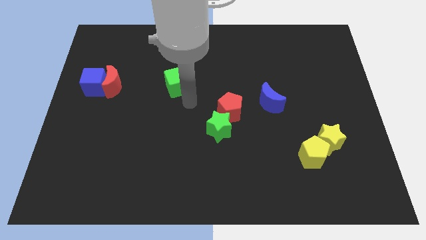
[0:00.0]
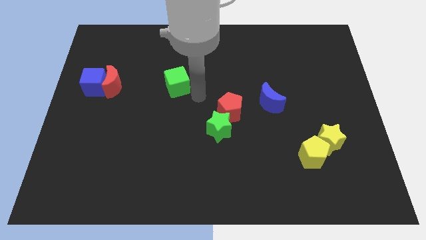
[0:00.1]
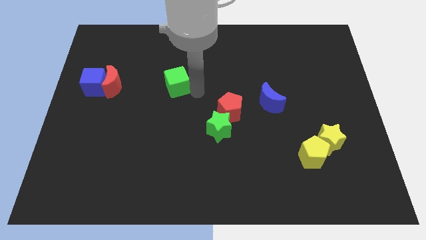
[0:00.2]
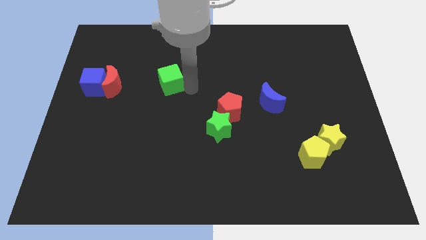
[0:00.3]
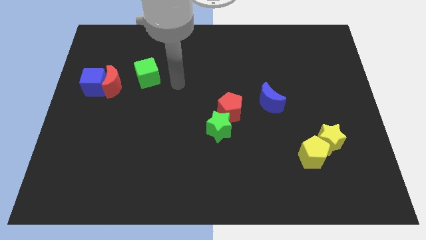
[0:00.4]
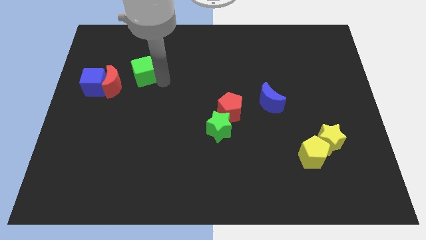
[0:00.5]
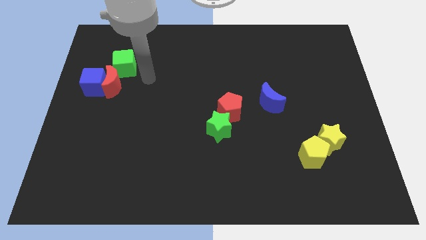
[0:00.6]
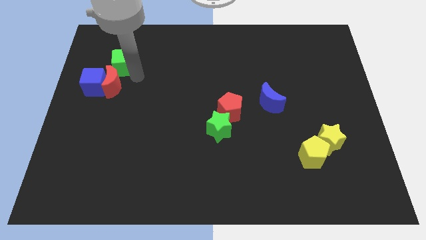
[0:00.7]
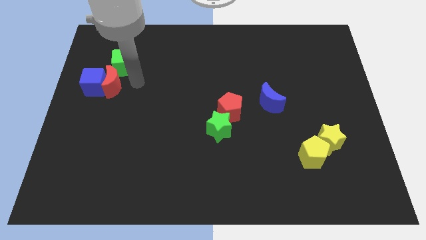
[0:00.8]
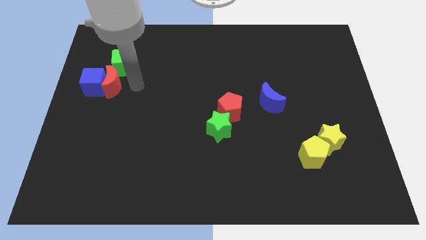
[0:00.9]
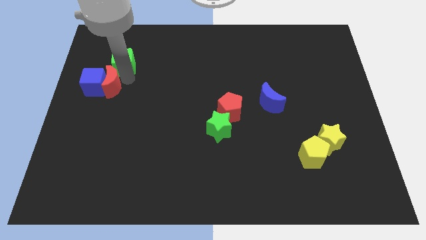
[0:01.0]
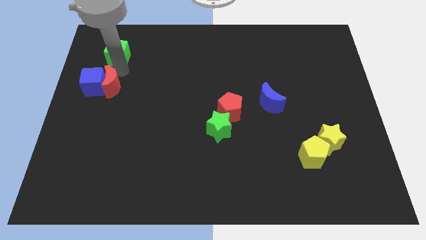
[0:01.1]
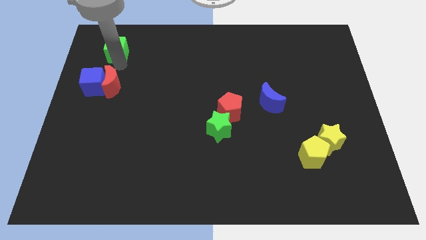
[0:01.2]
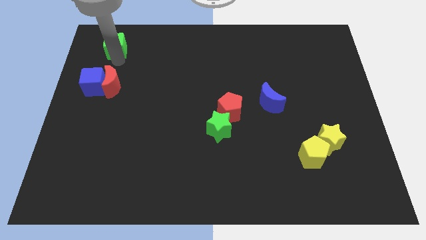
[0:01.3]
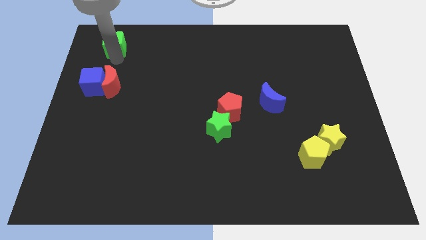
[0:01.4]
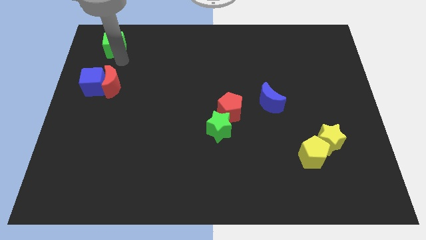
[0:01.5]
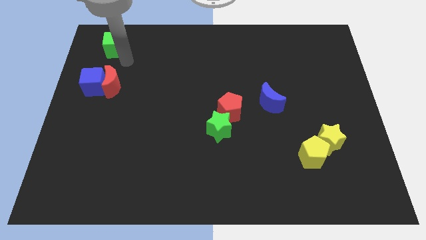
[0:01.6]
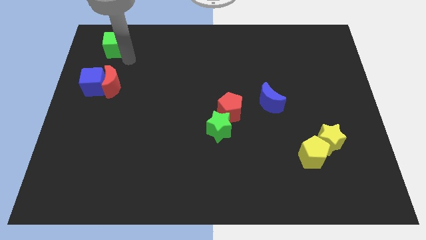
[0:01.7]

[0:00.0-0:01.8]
move the green cube to the vertical top of red moon

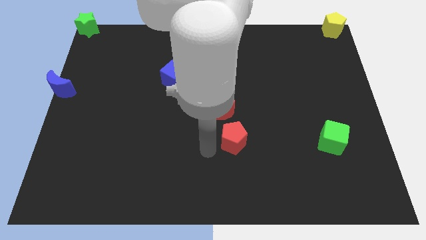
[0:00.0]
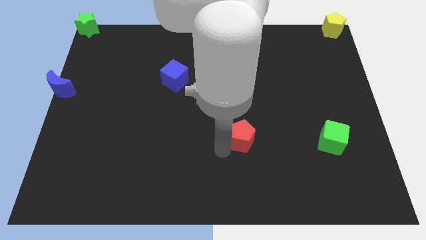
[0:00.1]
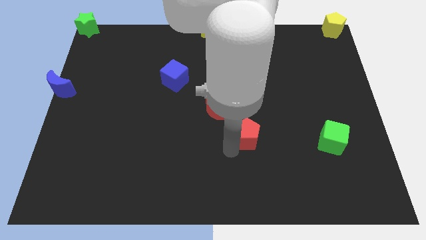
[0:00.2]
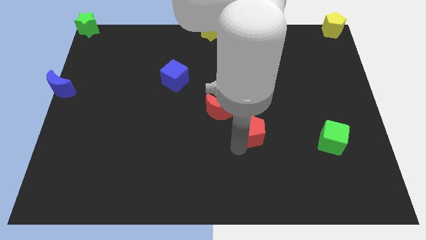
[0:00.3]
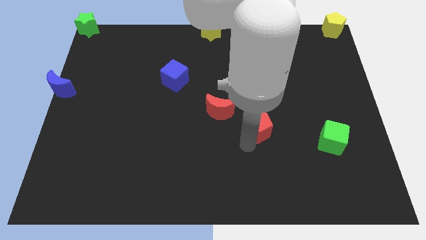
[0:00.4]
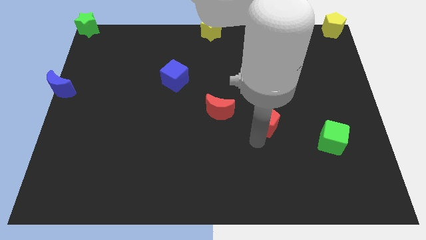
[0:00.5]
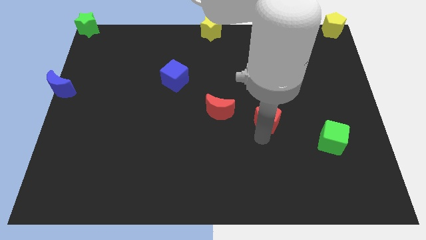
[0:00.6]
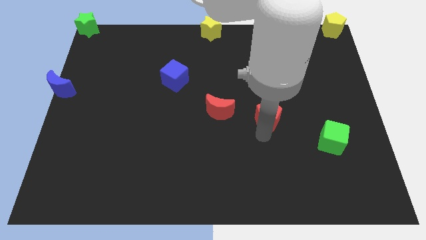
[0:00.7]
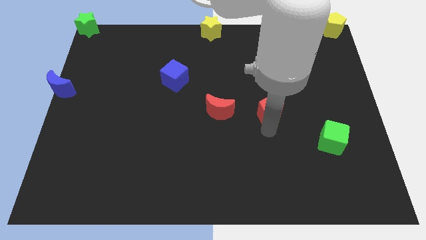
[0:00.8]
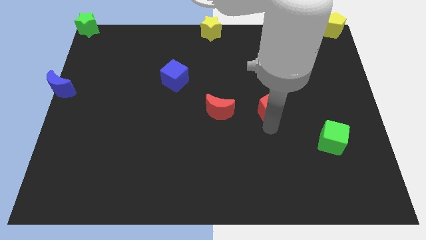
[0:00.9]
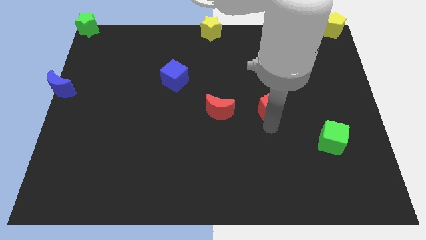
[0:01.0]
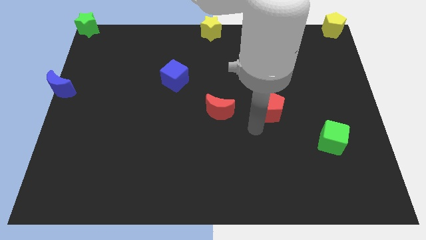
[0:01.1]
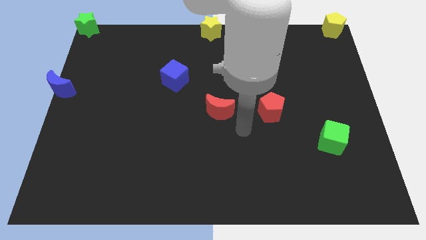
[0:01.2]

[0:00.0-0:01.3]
push the red pentagon to the right of red crescent

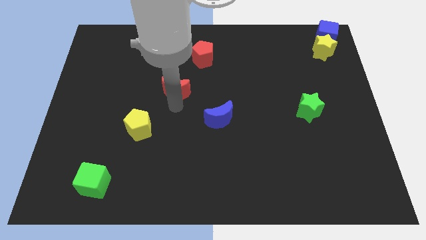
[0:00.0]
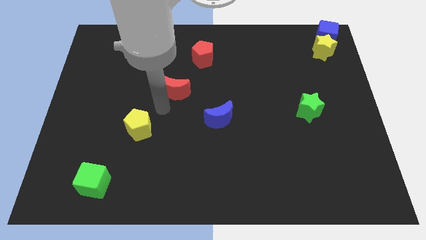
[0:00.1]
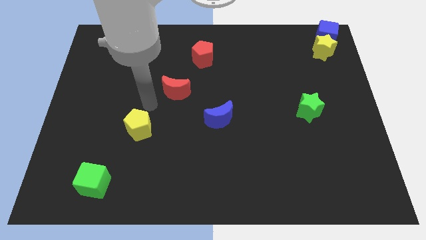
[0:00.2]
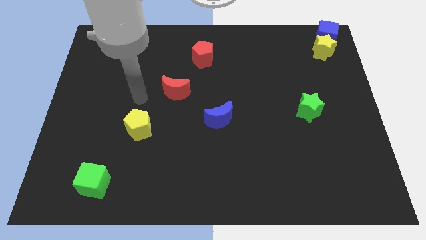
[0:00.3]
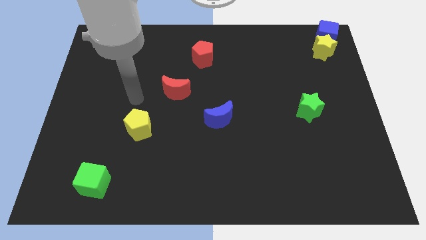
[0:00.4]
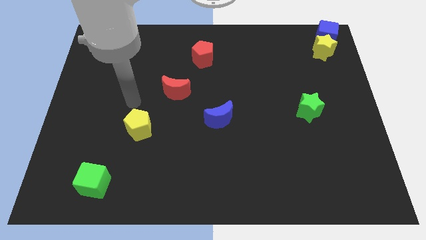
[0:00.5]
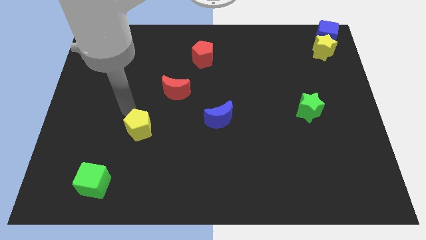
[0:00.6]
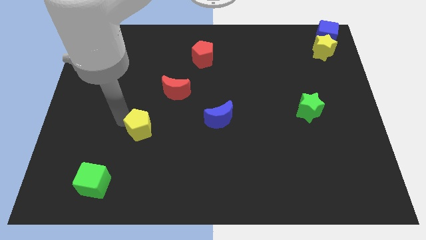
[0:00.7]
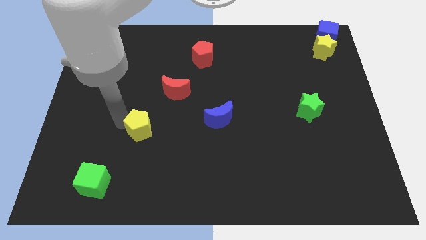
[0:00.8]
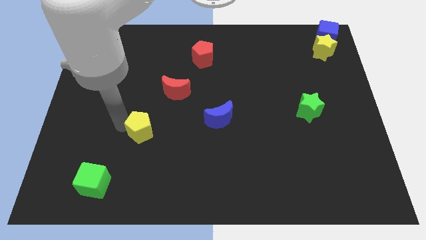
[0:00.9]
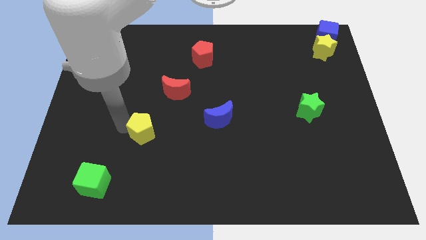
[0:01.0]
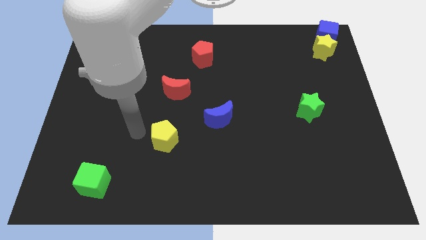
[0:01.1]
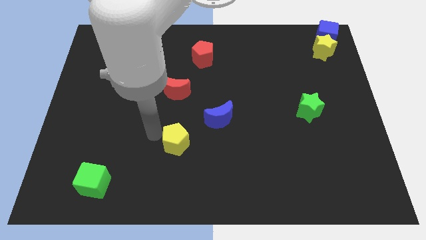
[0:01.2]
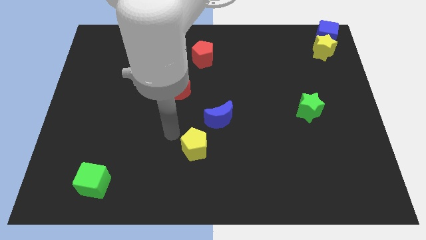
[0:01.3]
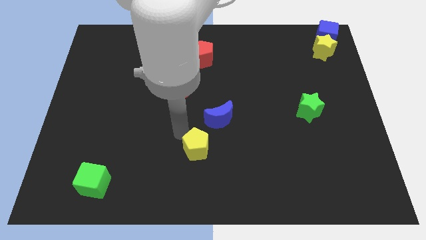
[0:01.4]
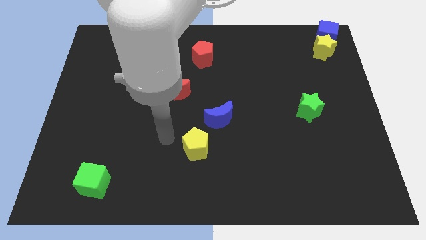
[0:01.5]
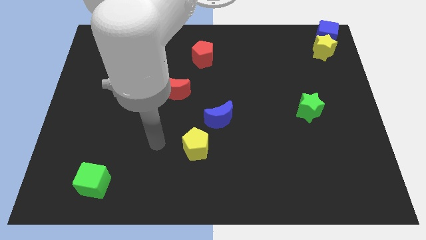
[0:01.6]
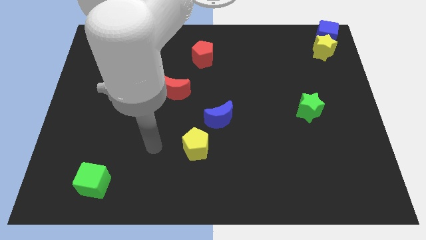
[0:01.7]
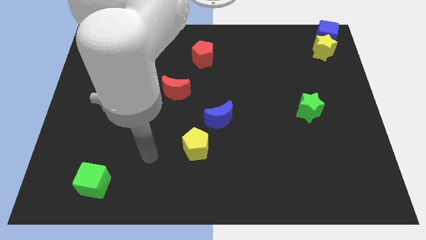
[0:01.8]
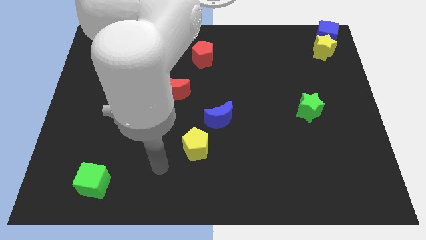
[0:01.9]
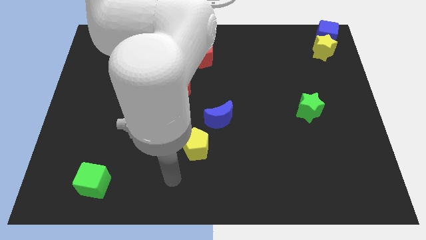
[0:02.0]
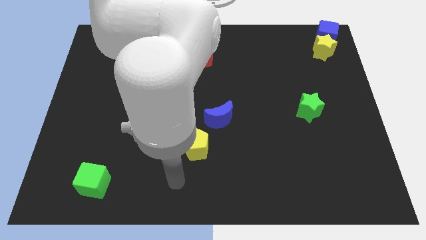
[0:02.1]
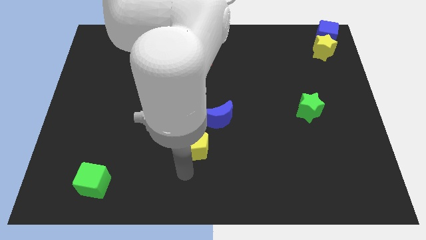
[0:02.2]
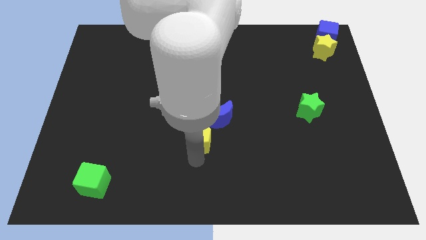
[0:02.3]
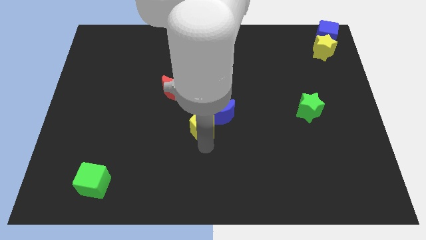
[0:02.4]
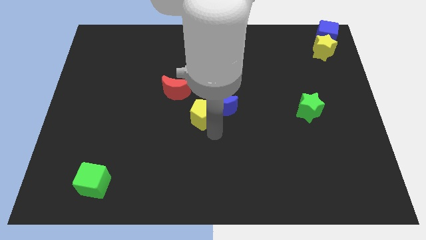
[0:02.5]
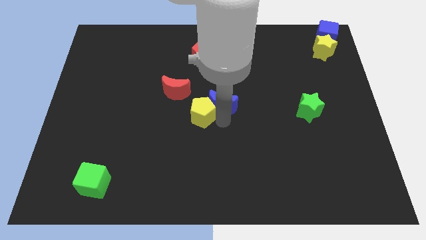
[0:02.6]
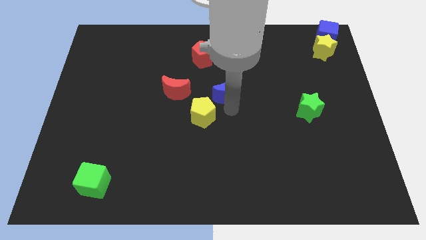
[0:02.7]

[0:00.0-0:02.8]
push the yellow pentagon to the left of the blue crescent

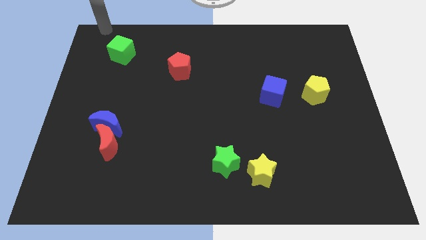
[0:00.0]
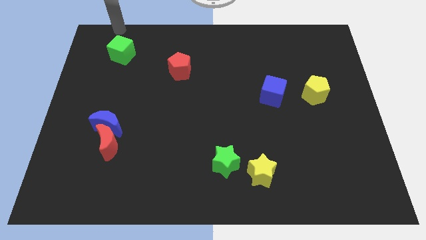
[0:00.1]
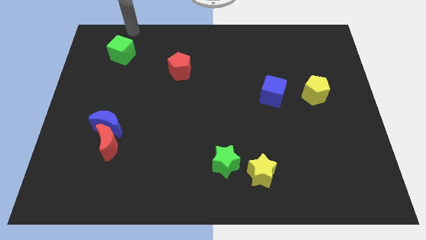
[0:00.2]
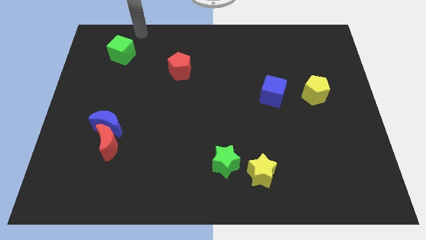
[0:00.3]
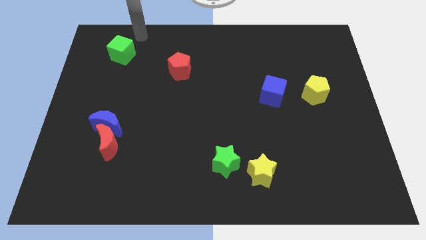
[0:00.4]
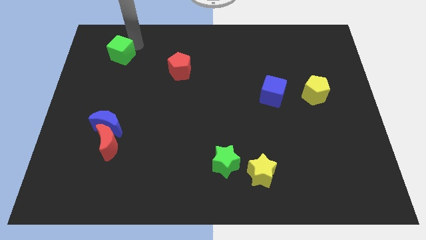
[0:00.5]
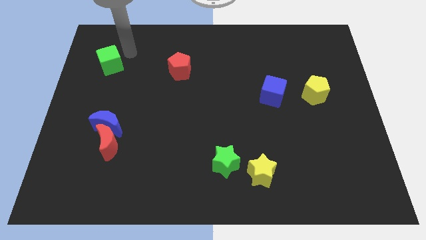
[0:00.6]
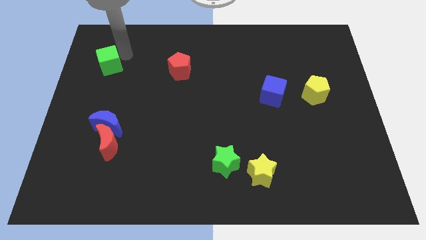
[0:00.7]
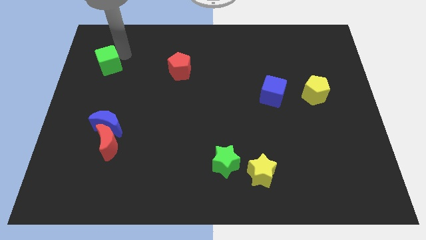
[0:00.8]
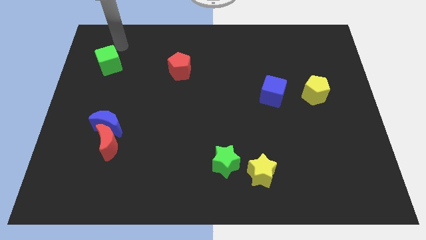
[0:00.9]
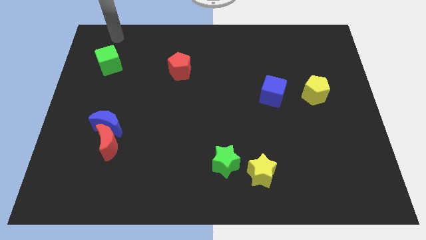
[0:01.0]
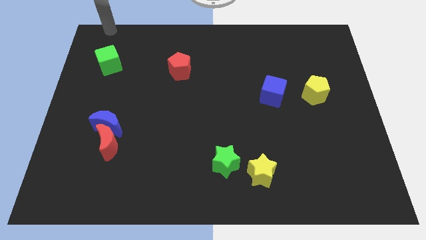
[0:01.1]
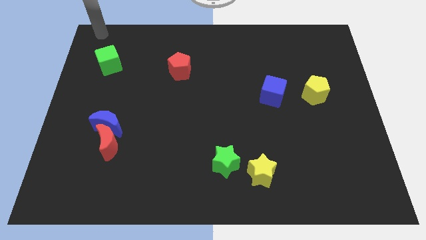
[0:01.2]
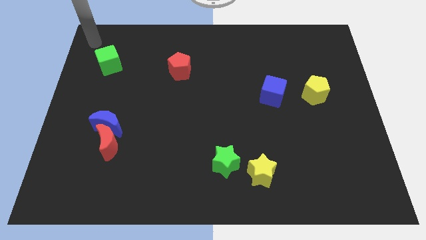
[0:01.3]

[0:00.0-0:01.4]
slightly push the green cube down

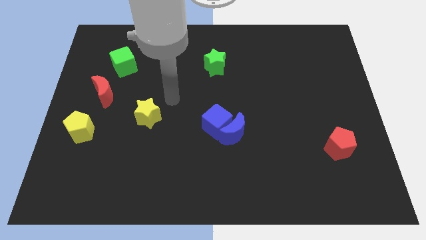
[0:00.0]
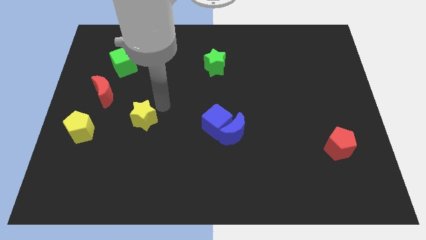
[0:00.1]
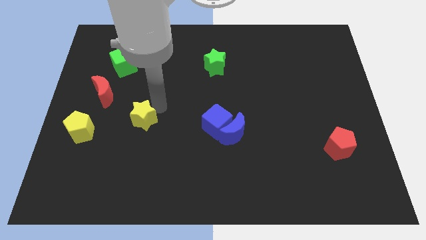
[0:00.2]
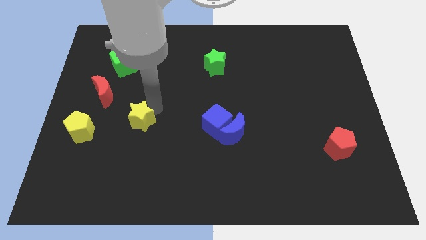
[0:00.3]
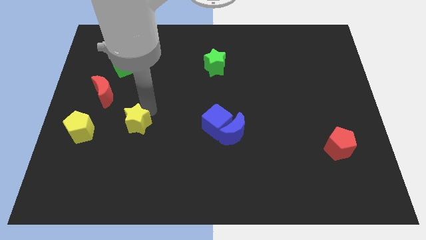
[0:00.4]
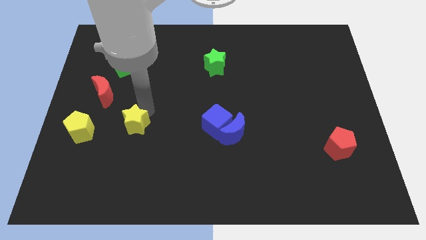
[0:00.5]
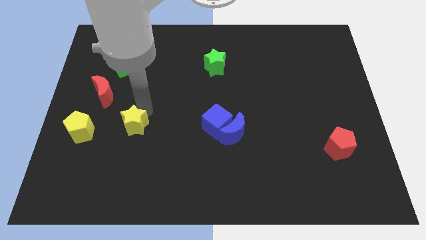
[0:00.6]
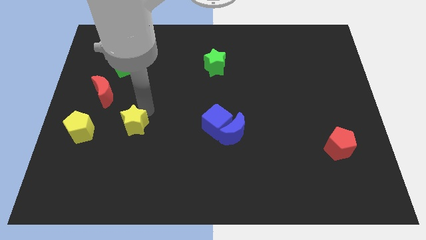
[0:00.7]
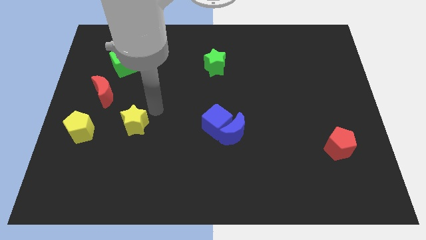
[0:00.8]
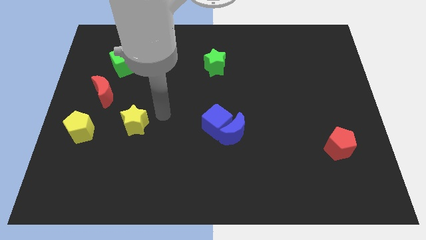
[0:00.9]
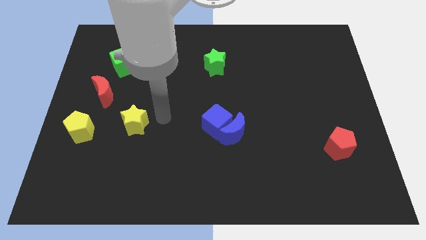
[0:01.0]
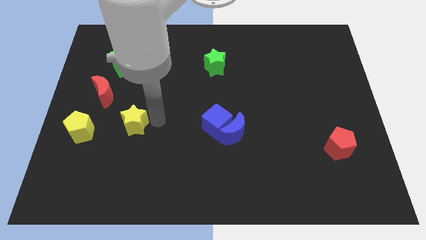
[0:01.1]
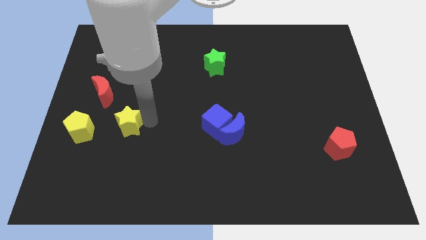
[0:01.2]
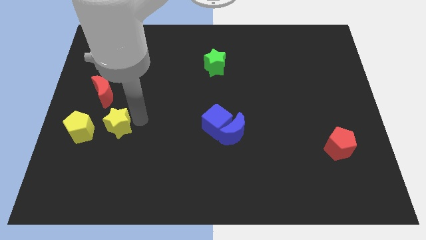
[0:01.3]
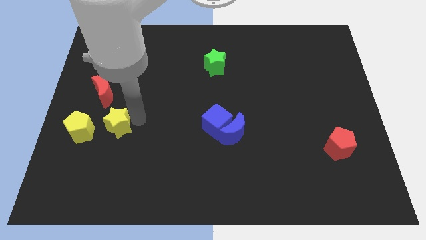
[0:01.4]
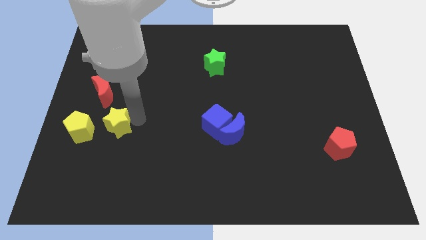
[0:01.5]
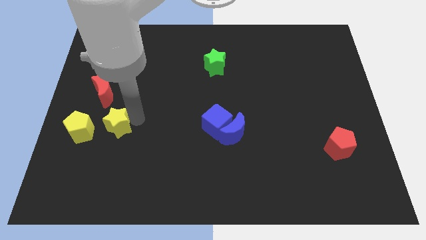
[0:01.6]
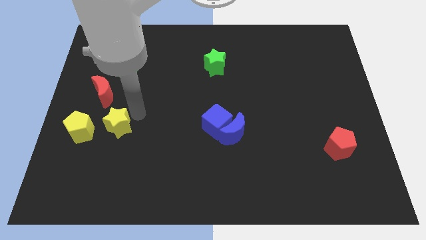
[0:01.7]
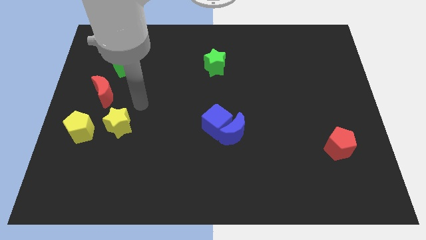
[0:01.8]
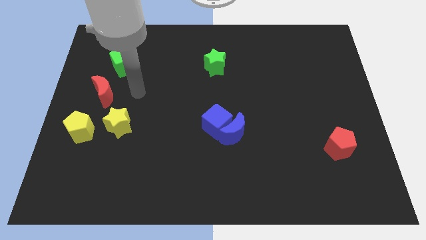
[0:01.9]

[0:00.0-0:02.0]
push the yellow star towards the right of the yellow pentagon
